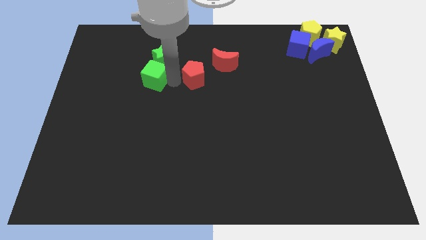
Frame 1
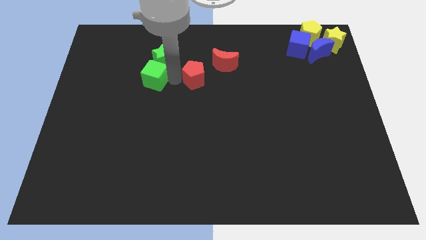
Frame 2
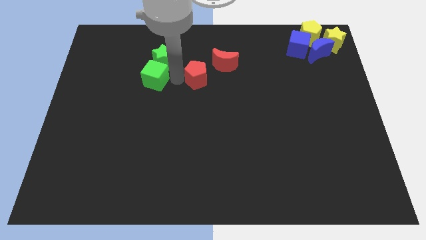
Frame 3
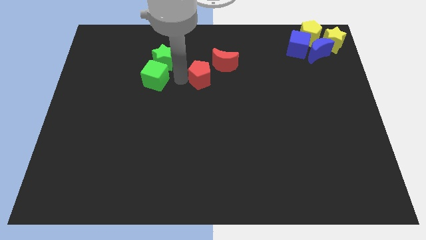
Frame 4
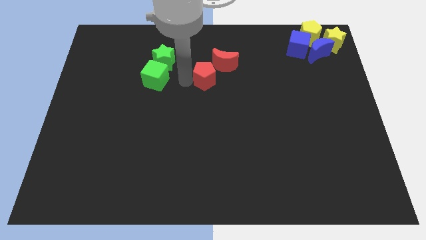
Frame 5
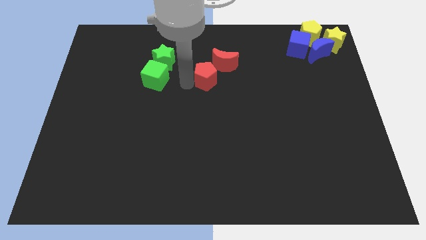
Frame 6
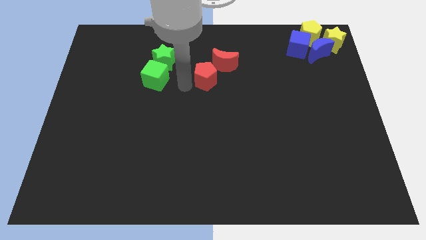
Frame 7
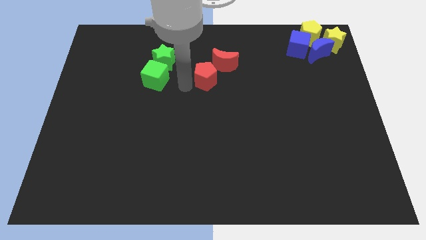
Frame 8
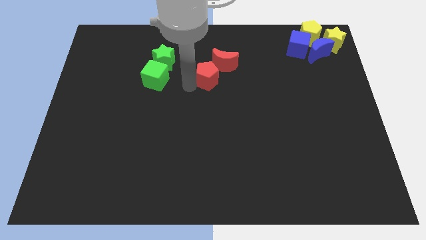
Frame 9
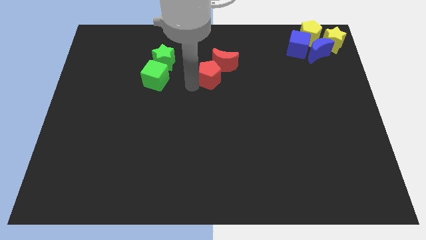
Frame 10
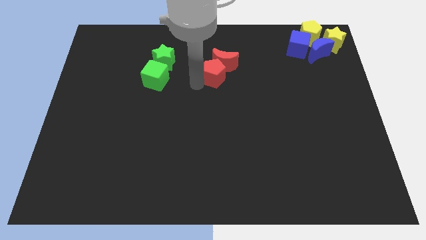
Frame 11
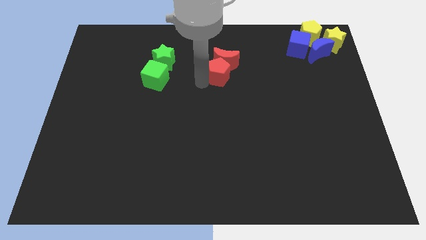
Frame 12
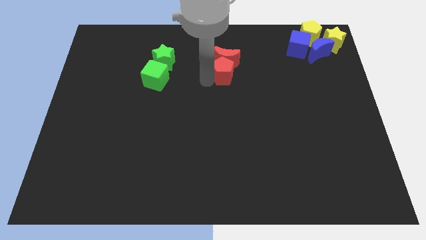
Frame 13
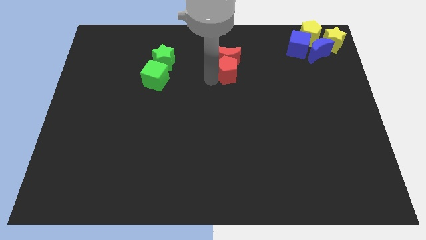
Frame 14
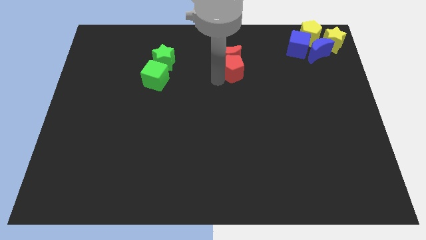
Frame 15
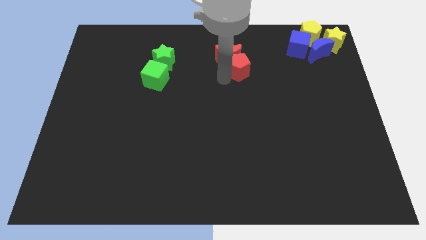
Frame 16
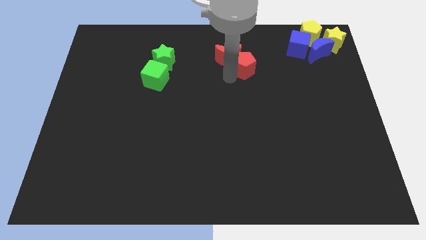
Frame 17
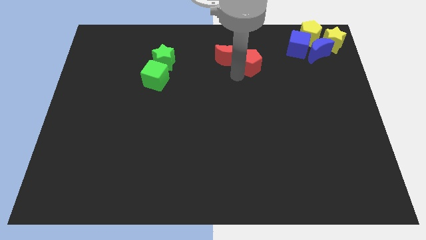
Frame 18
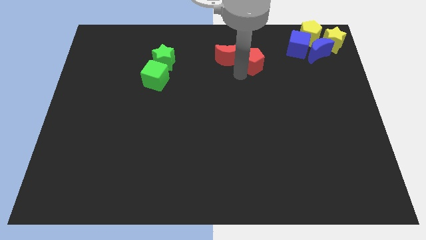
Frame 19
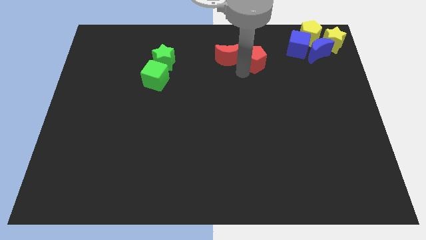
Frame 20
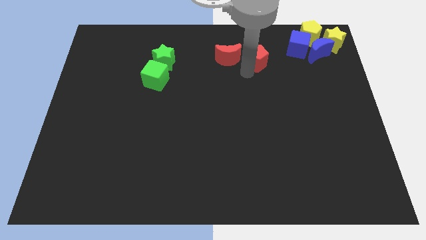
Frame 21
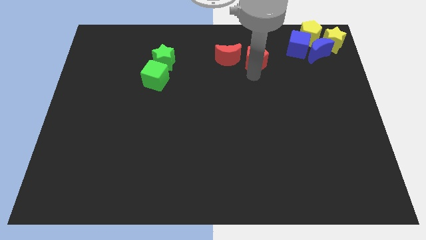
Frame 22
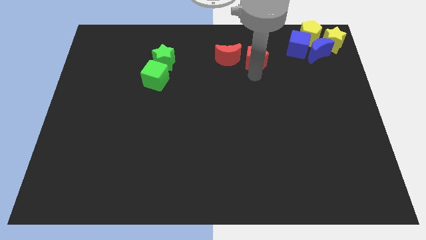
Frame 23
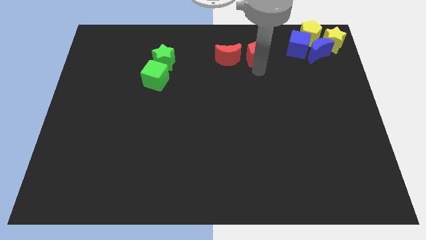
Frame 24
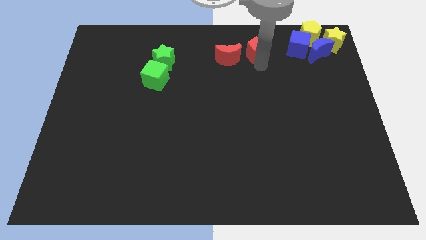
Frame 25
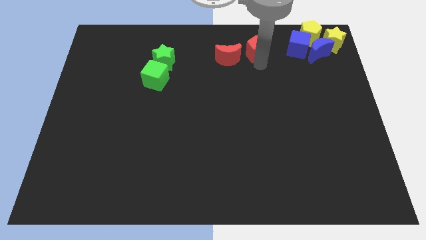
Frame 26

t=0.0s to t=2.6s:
place the red pentagon right to the red moon

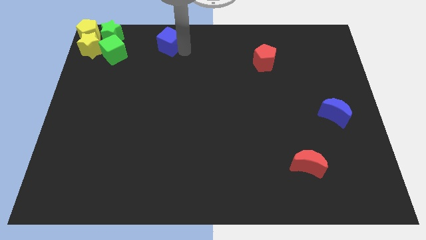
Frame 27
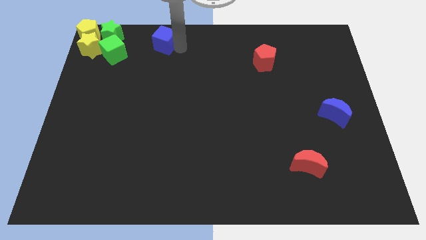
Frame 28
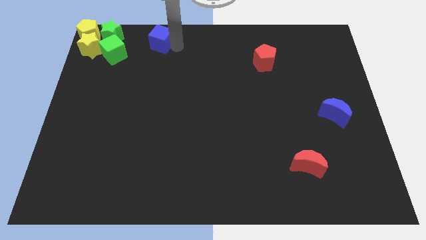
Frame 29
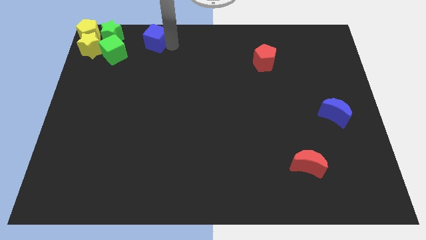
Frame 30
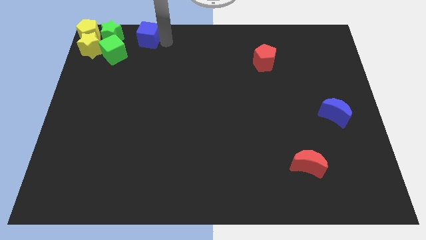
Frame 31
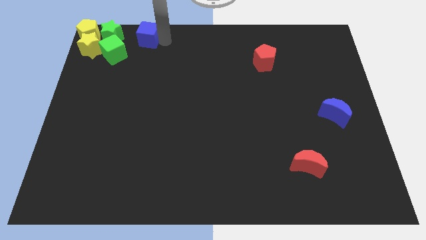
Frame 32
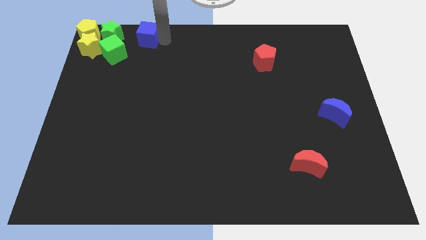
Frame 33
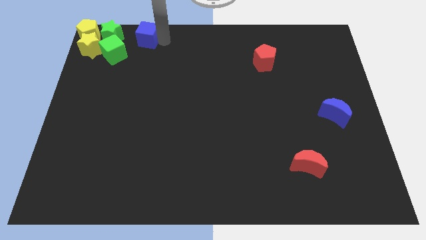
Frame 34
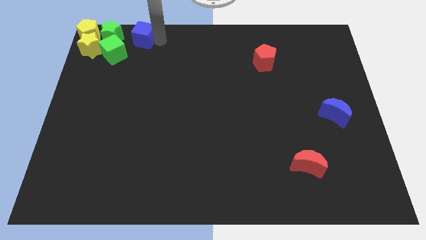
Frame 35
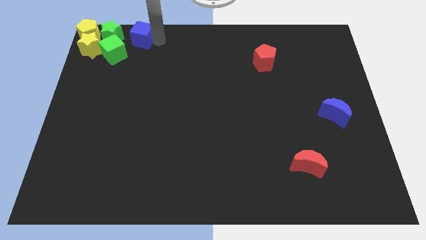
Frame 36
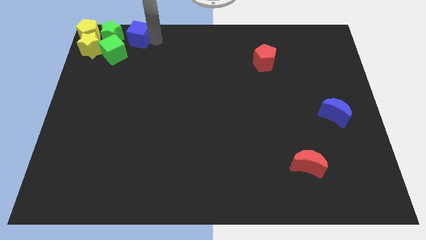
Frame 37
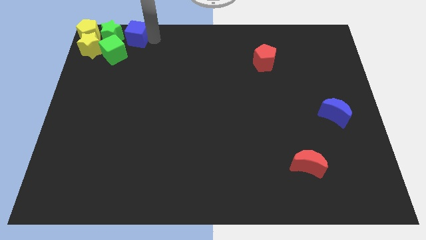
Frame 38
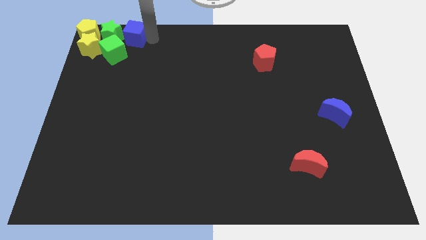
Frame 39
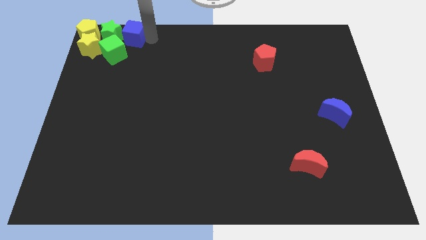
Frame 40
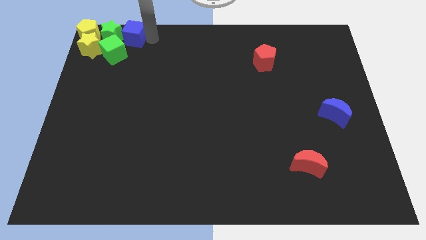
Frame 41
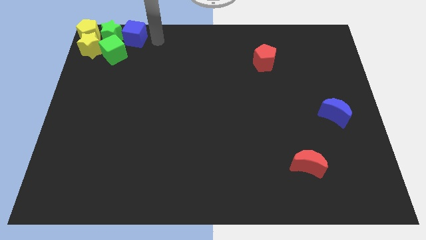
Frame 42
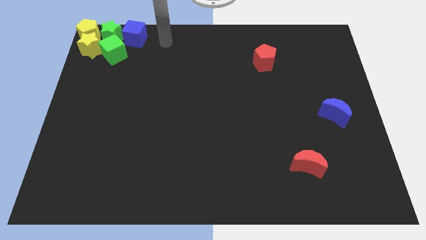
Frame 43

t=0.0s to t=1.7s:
place the blue cube right to the green star to form a horizontal line

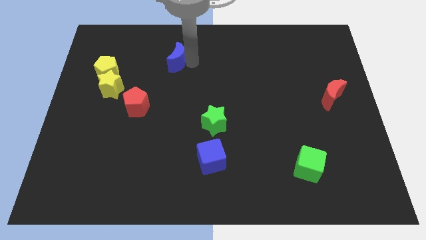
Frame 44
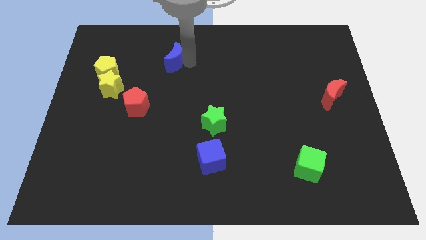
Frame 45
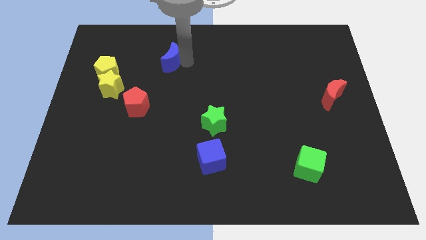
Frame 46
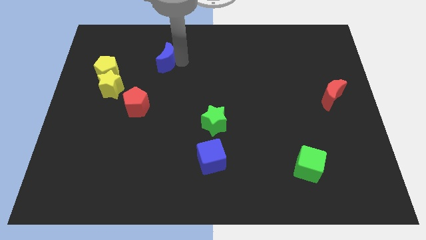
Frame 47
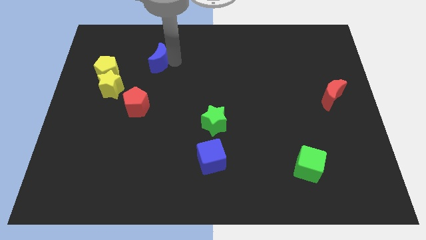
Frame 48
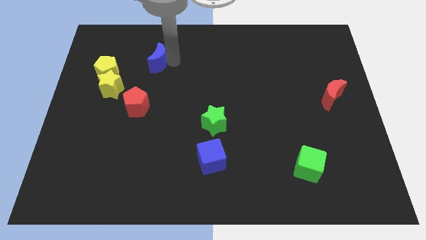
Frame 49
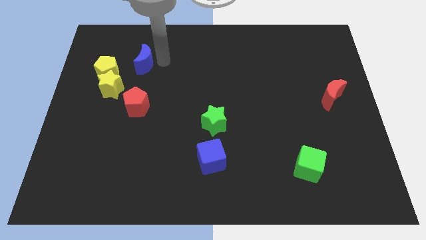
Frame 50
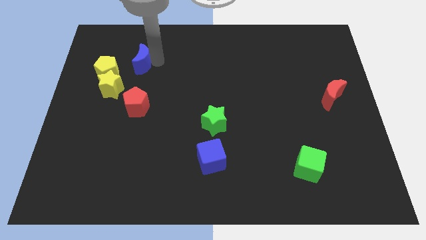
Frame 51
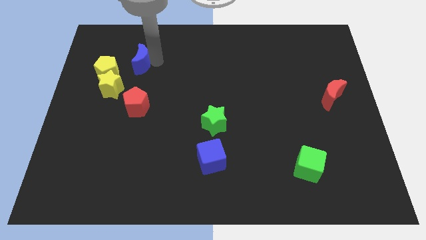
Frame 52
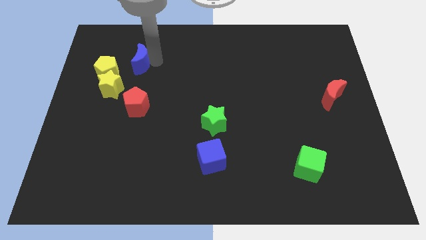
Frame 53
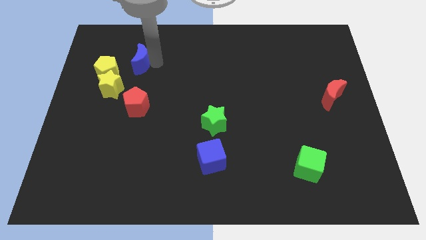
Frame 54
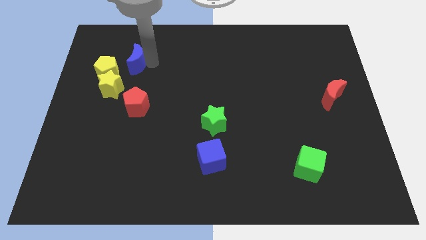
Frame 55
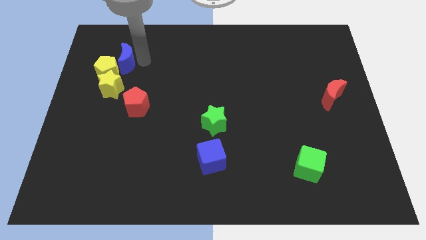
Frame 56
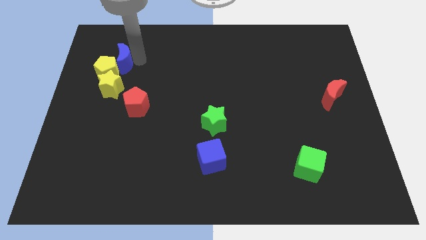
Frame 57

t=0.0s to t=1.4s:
put the blue moon at the top right side of yellow pentagon

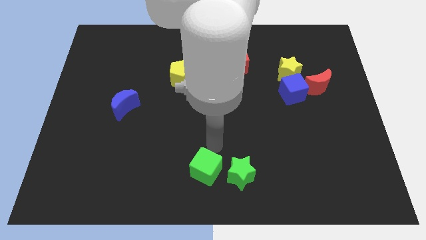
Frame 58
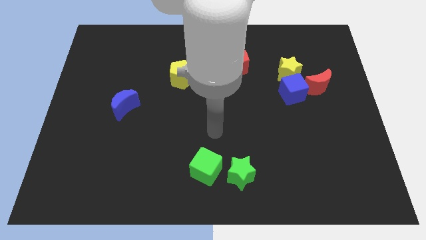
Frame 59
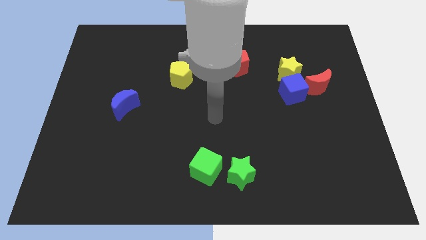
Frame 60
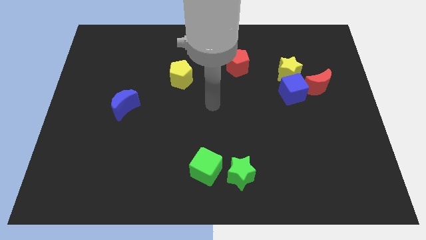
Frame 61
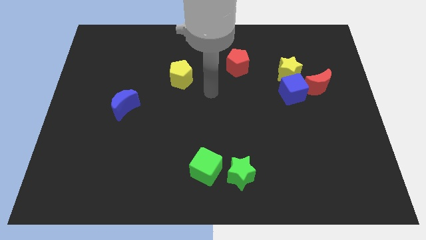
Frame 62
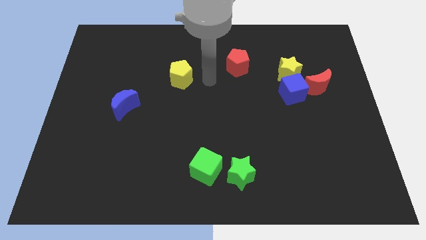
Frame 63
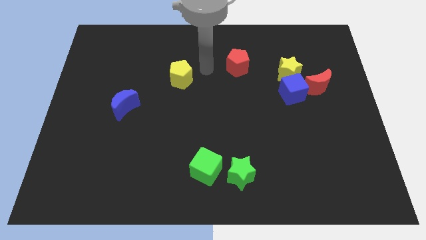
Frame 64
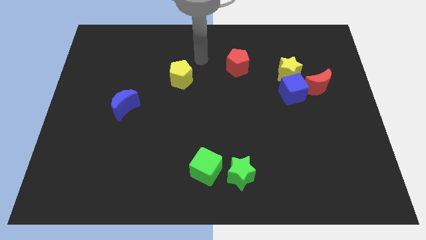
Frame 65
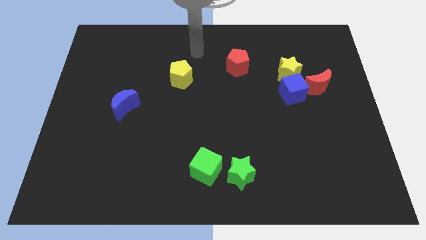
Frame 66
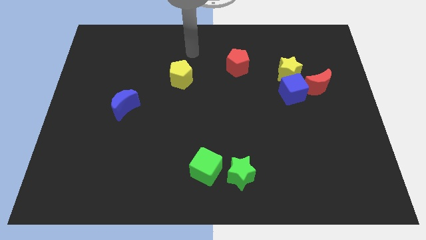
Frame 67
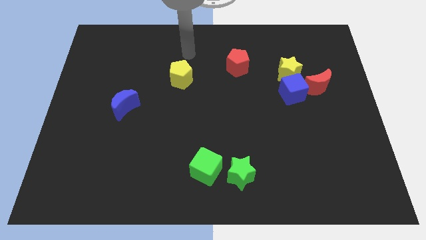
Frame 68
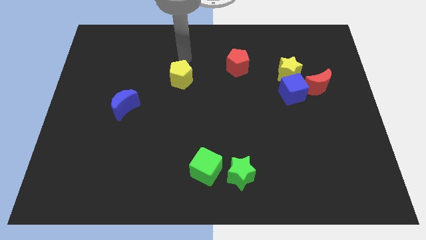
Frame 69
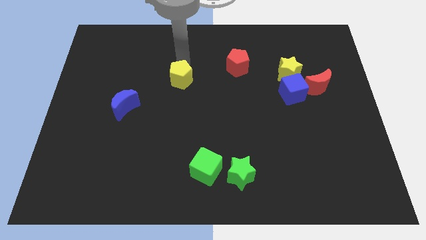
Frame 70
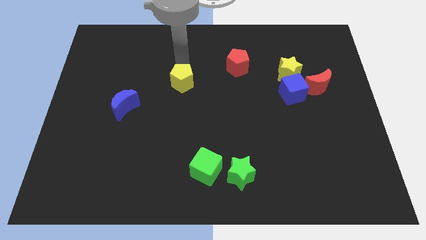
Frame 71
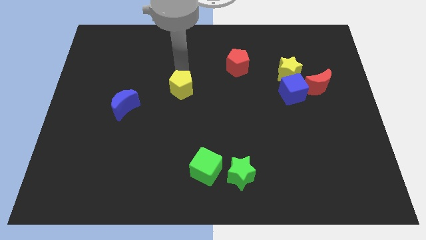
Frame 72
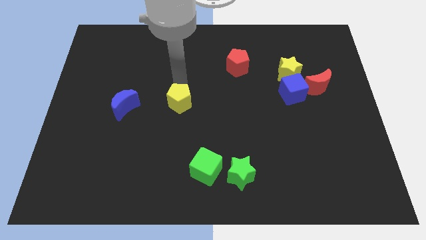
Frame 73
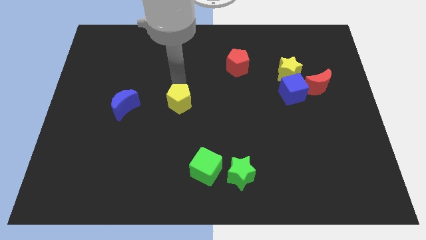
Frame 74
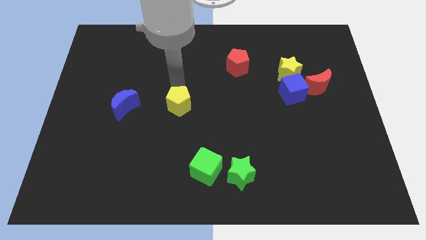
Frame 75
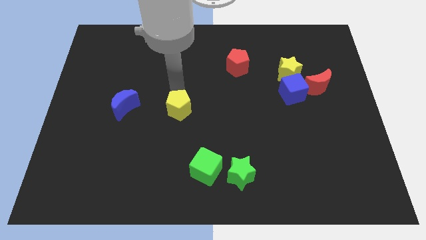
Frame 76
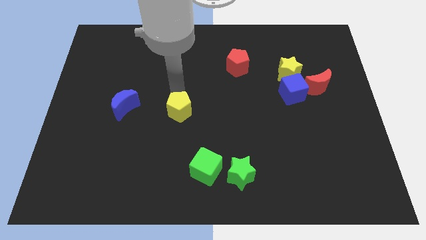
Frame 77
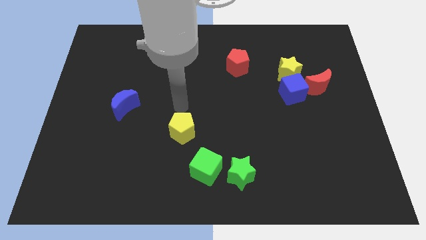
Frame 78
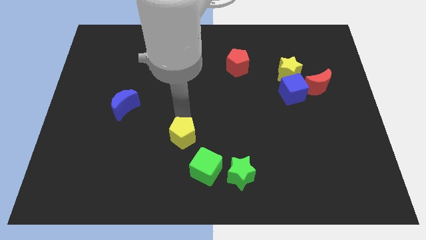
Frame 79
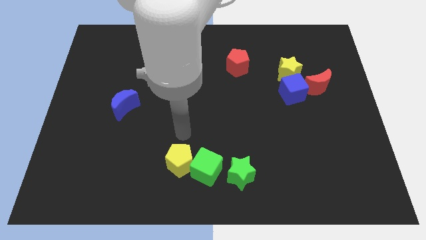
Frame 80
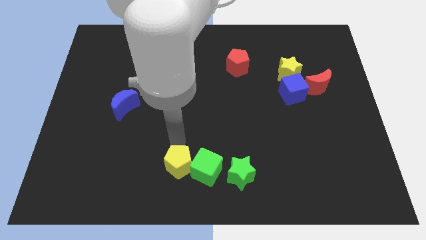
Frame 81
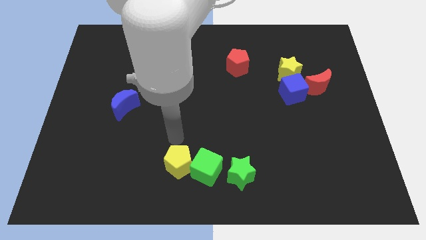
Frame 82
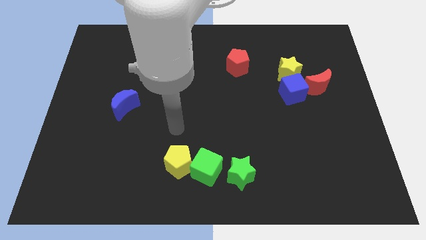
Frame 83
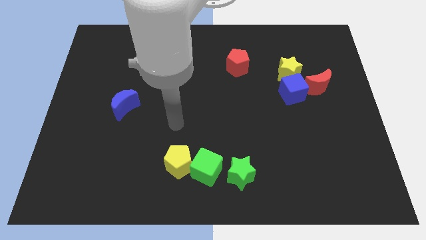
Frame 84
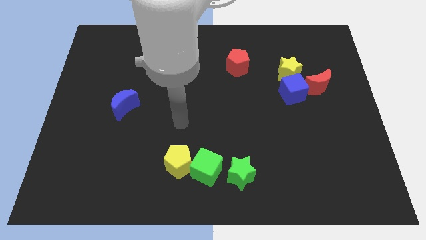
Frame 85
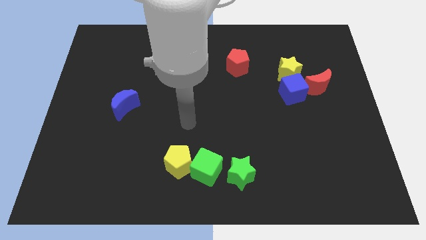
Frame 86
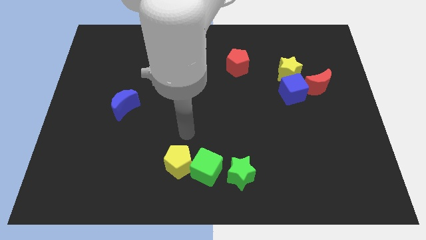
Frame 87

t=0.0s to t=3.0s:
push the yellow pentagon downward

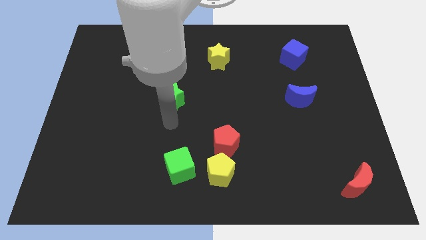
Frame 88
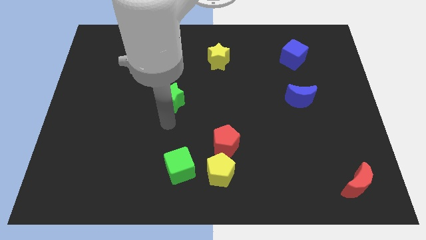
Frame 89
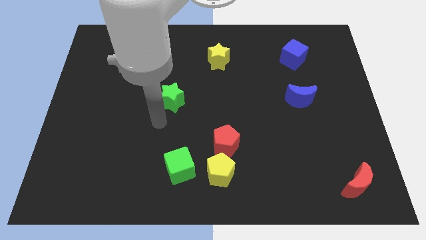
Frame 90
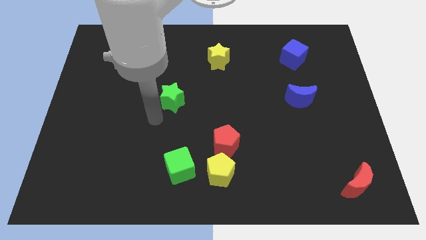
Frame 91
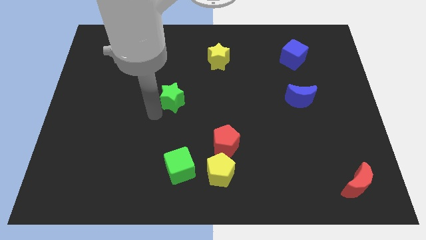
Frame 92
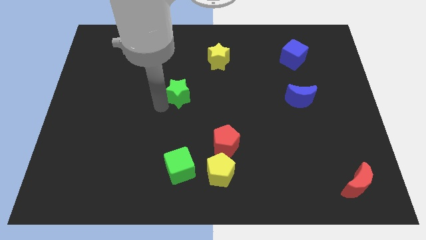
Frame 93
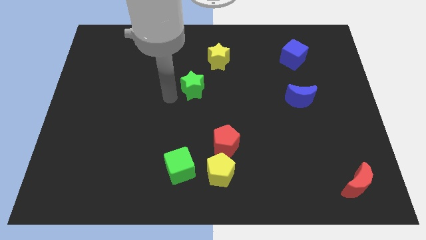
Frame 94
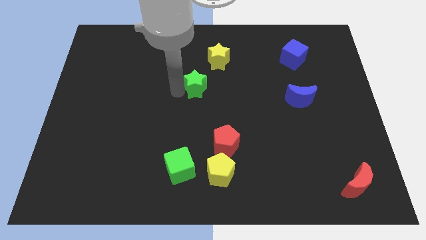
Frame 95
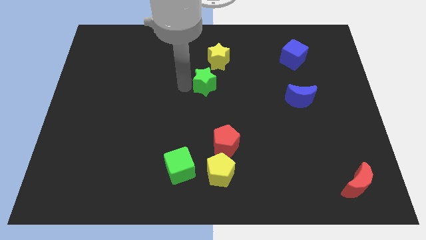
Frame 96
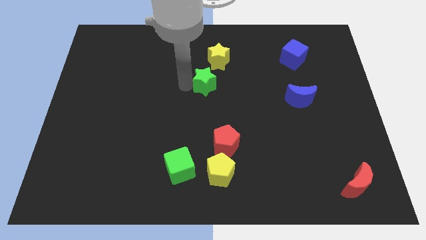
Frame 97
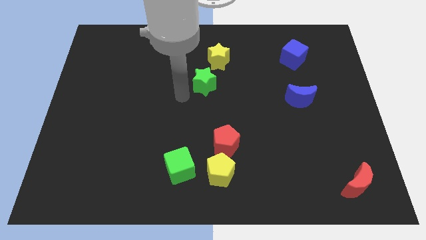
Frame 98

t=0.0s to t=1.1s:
slide the green star diagonal top left to red pentagon
